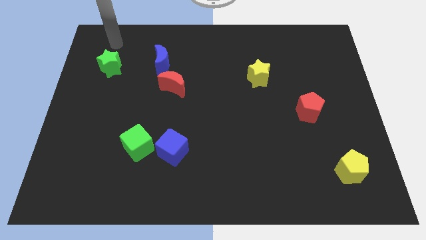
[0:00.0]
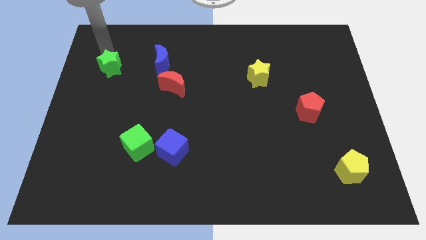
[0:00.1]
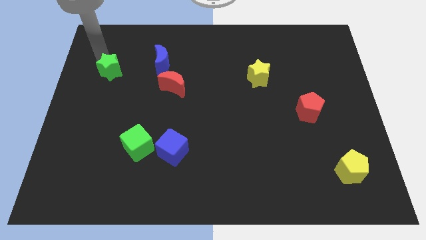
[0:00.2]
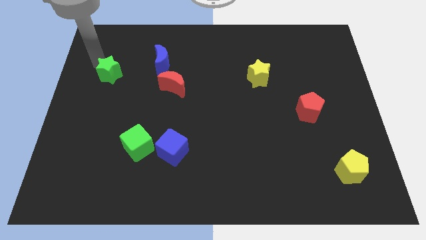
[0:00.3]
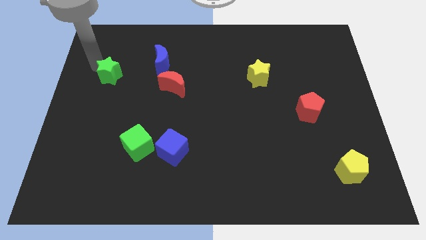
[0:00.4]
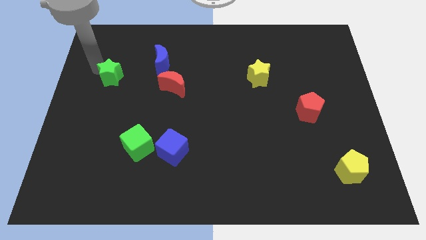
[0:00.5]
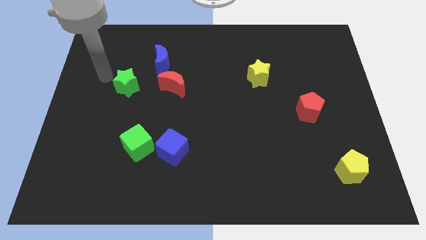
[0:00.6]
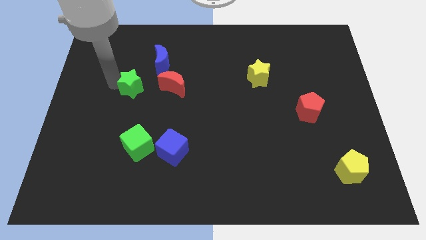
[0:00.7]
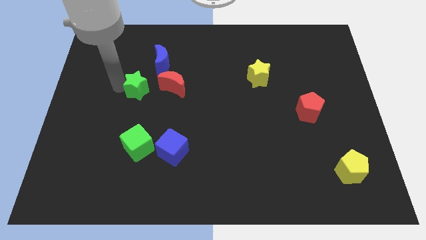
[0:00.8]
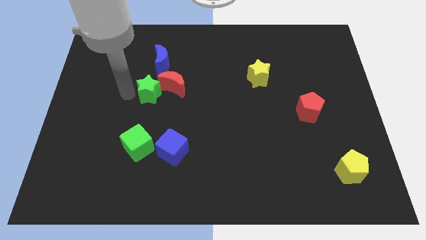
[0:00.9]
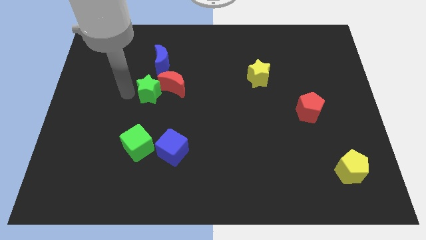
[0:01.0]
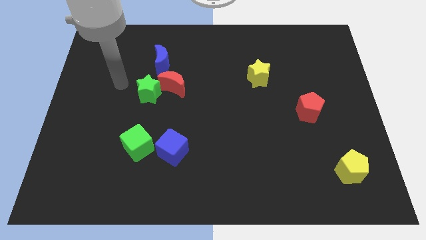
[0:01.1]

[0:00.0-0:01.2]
push the green star to the bottom left to the red crescent

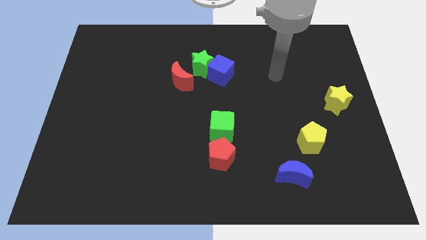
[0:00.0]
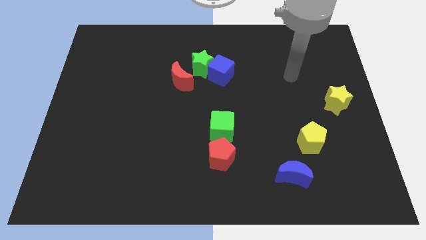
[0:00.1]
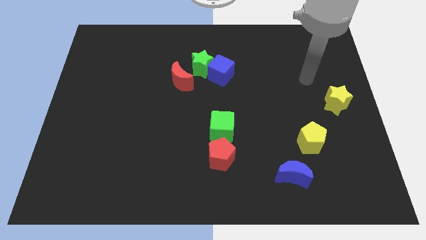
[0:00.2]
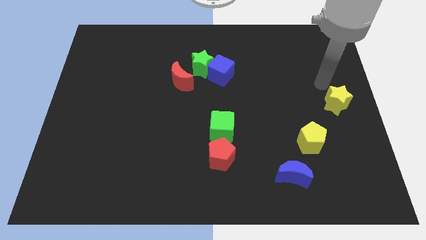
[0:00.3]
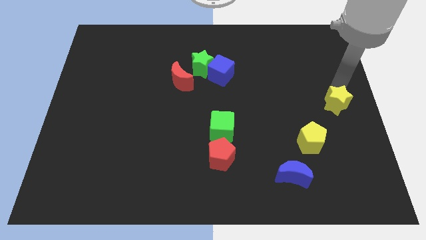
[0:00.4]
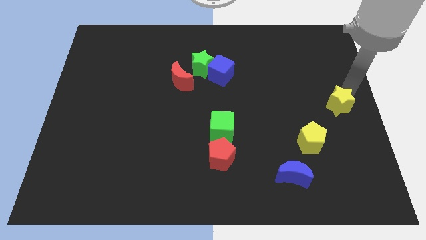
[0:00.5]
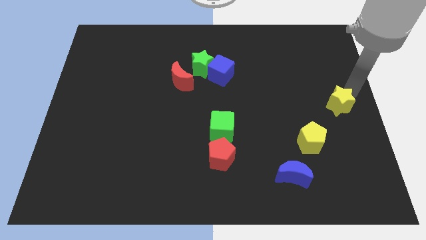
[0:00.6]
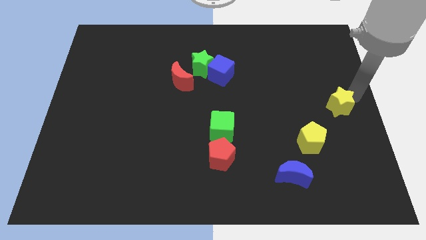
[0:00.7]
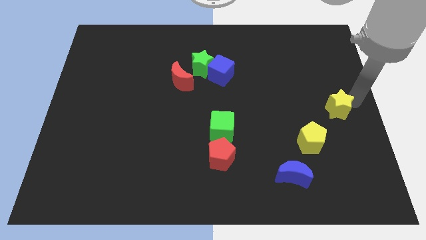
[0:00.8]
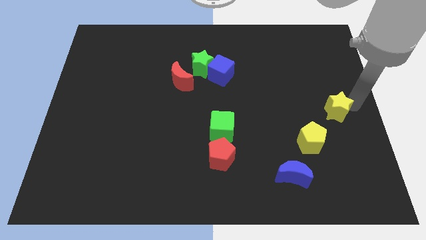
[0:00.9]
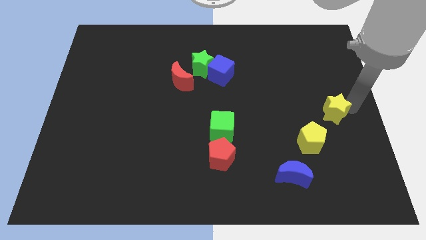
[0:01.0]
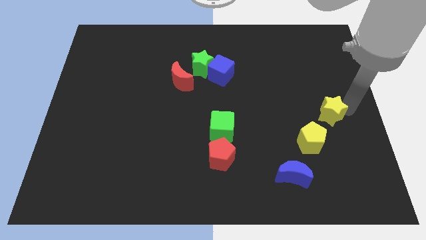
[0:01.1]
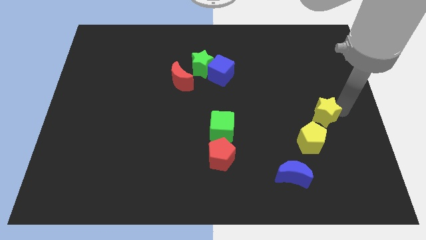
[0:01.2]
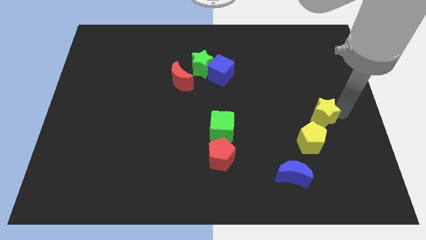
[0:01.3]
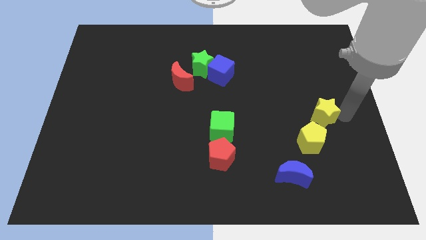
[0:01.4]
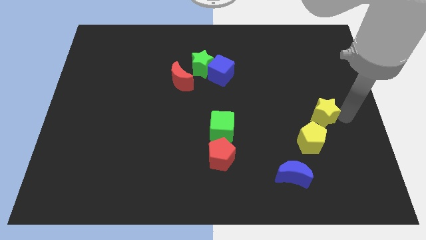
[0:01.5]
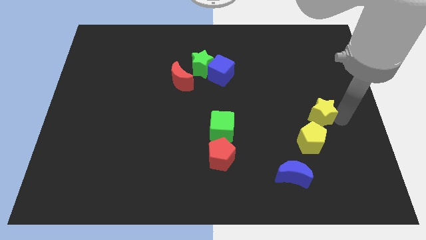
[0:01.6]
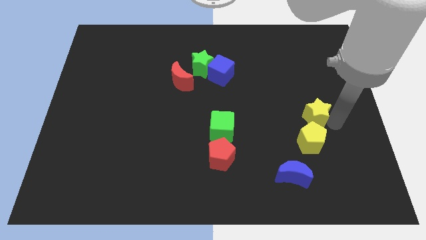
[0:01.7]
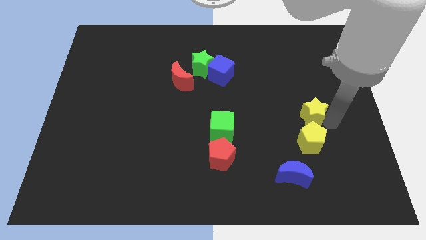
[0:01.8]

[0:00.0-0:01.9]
place the yellow star above the yellow pentagon

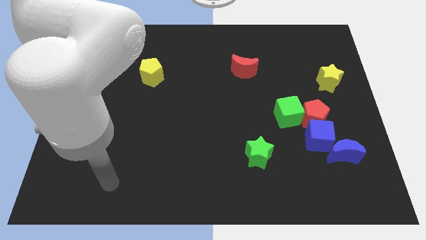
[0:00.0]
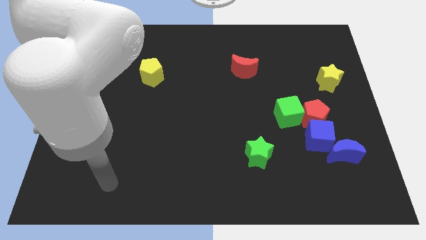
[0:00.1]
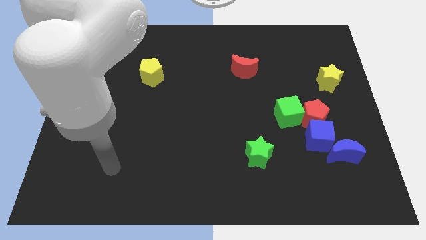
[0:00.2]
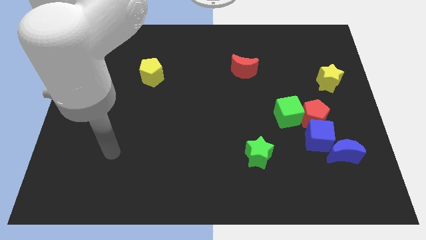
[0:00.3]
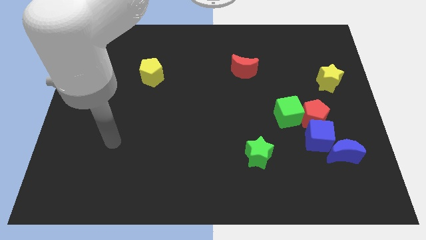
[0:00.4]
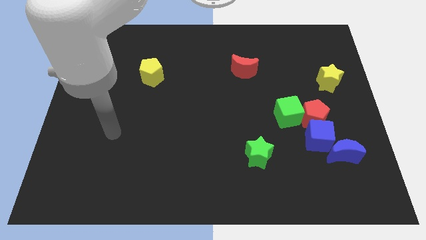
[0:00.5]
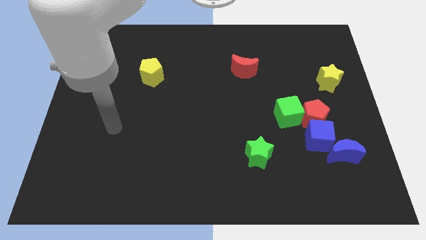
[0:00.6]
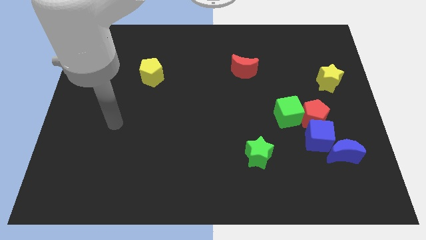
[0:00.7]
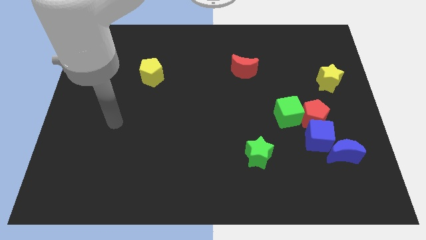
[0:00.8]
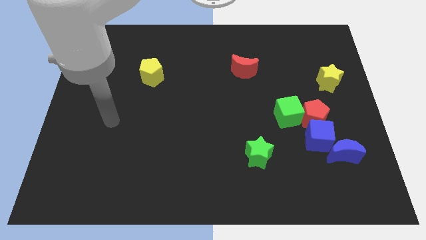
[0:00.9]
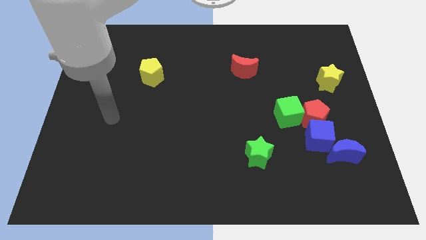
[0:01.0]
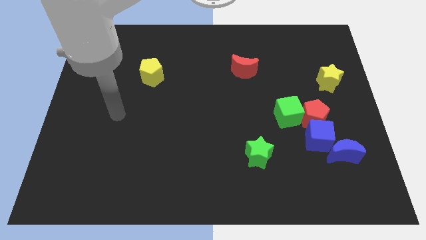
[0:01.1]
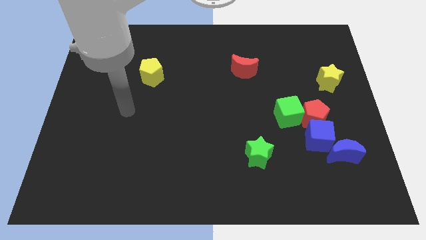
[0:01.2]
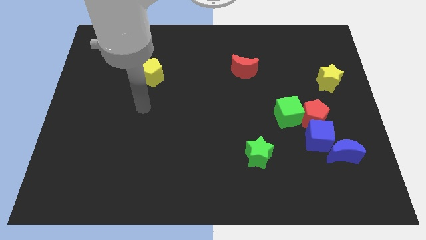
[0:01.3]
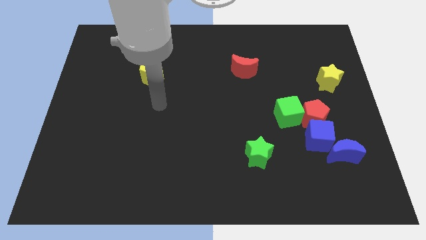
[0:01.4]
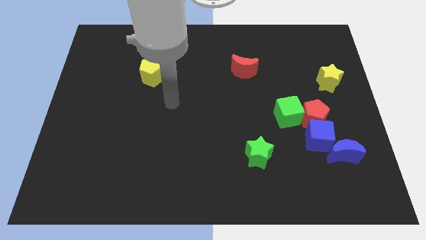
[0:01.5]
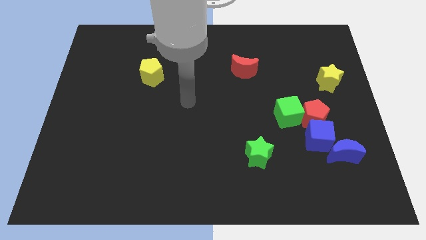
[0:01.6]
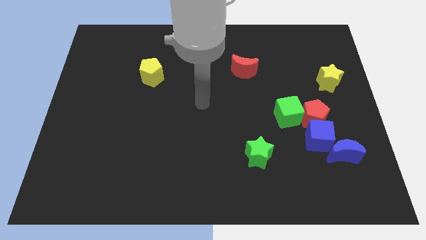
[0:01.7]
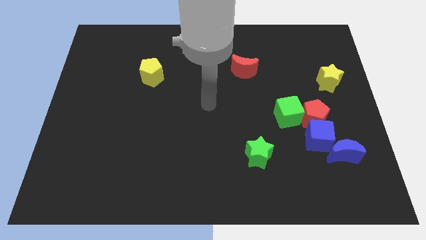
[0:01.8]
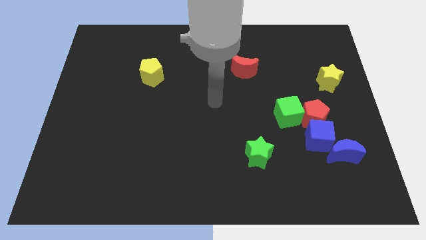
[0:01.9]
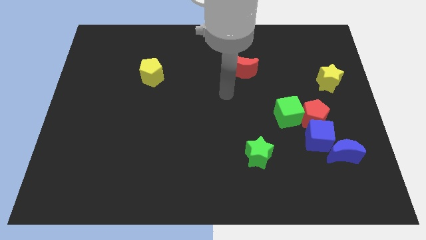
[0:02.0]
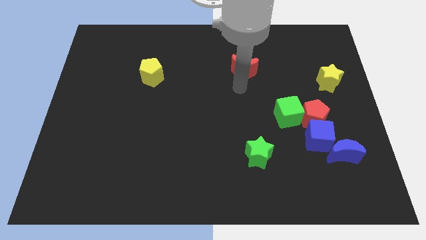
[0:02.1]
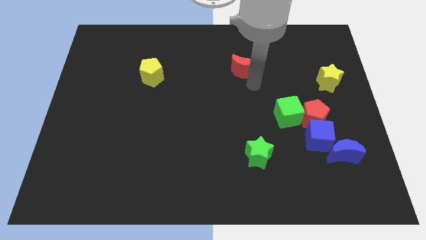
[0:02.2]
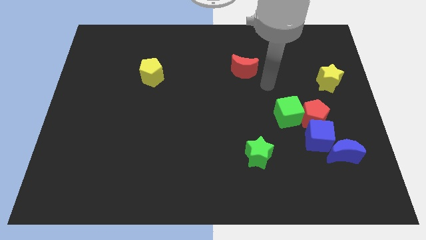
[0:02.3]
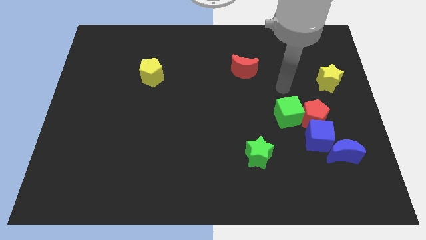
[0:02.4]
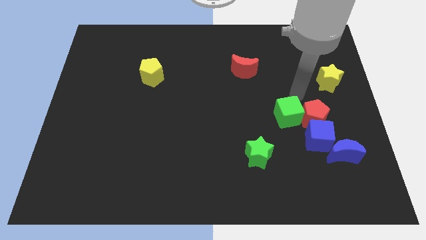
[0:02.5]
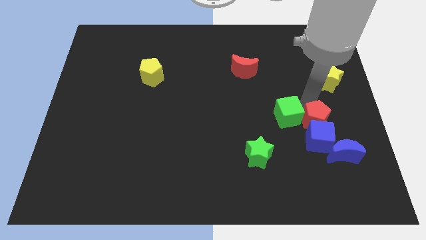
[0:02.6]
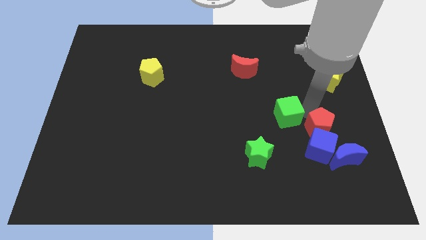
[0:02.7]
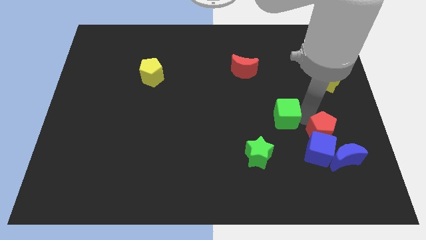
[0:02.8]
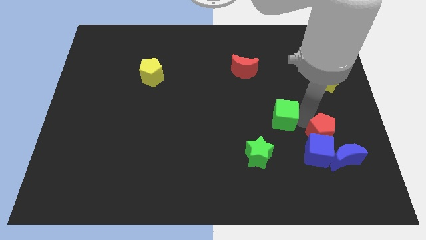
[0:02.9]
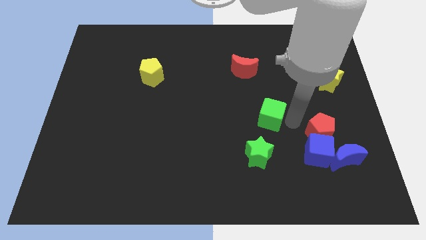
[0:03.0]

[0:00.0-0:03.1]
place your arm right to the green cube

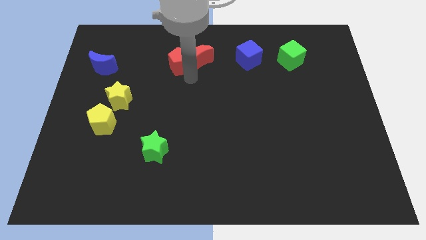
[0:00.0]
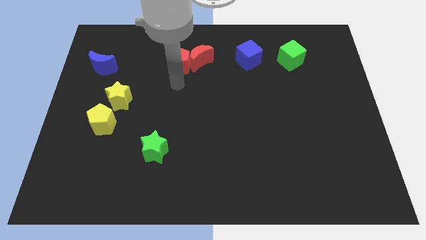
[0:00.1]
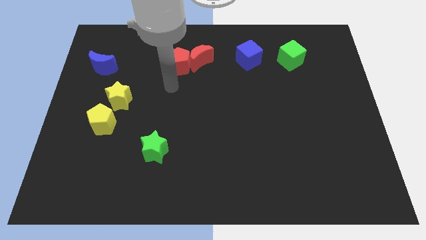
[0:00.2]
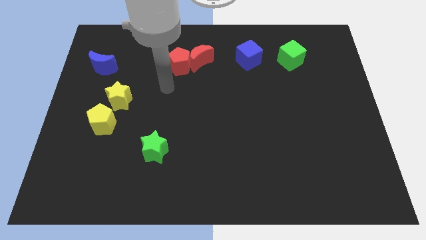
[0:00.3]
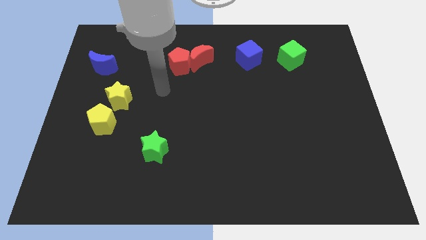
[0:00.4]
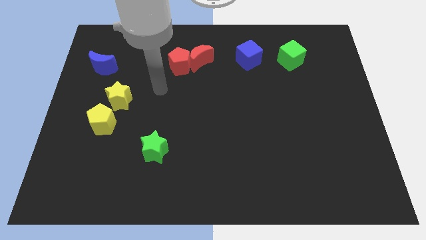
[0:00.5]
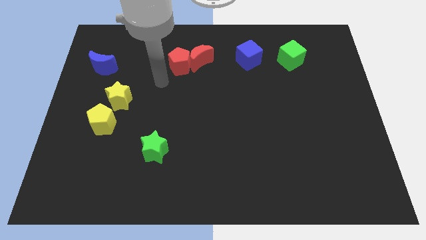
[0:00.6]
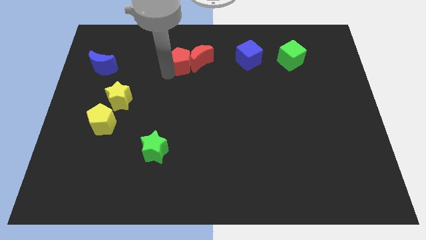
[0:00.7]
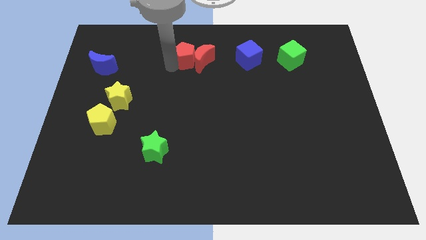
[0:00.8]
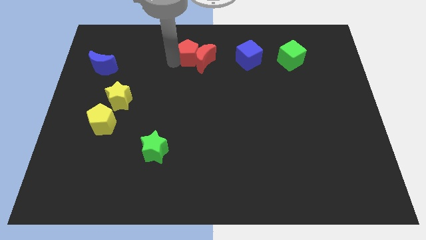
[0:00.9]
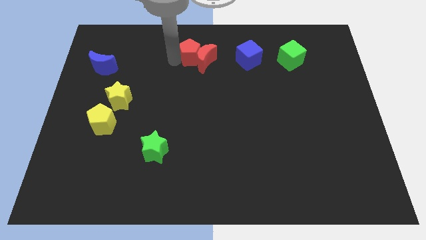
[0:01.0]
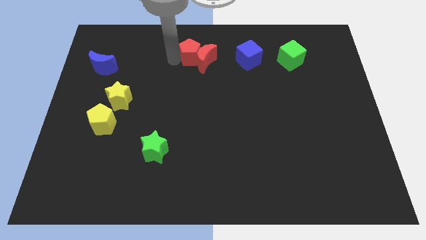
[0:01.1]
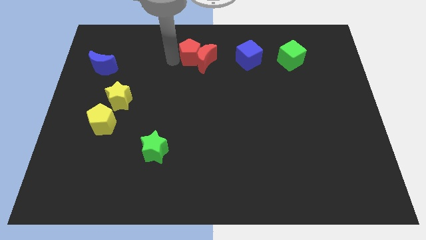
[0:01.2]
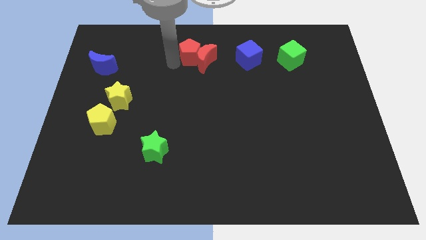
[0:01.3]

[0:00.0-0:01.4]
slightly move the red pentagon to the top centre of the board

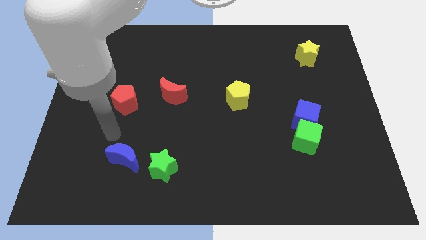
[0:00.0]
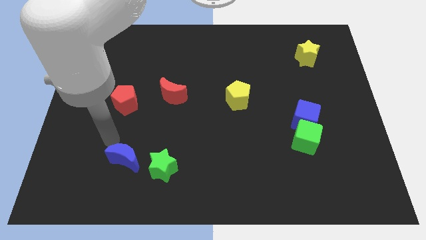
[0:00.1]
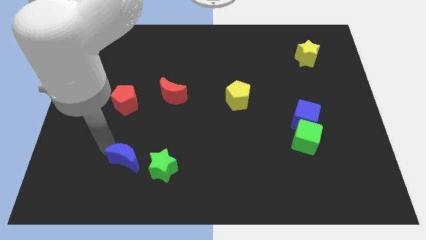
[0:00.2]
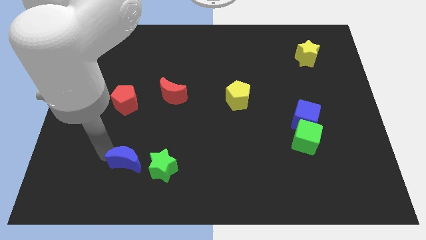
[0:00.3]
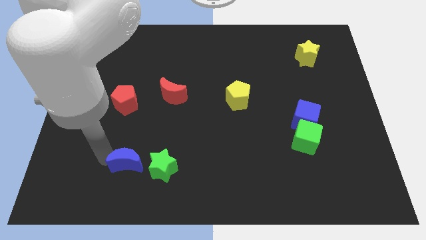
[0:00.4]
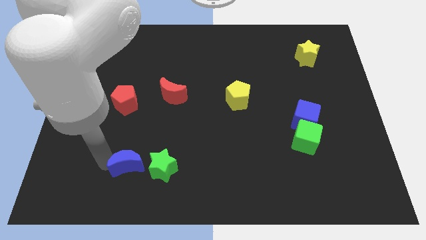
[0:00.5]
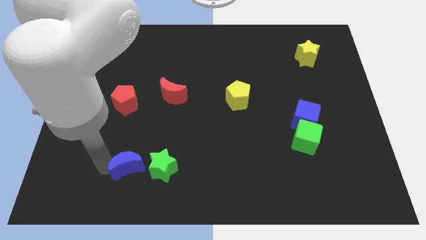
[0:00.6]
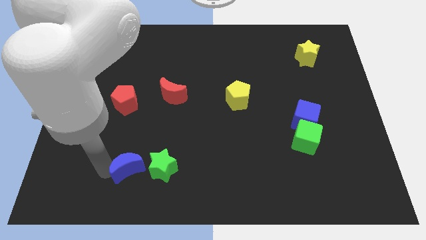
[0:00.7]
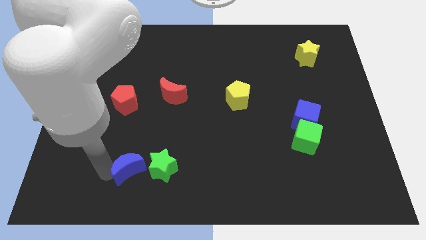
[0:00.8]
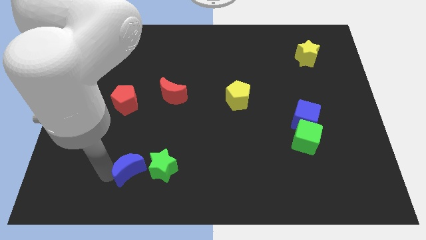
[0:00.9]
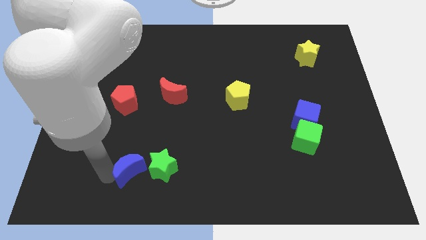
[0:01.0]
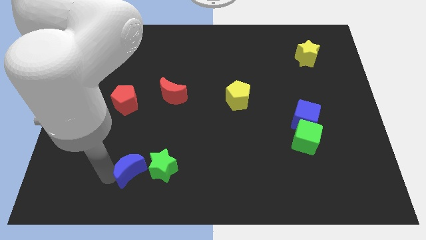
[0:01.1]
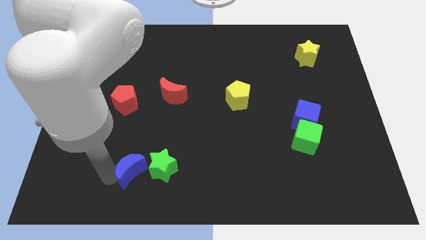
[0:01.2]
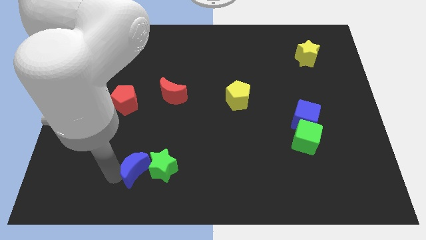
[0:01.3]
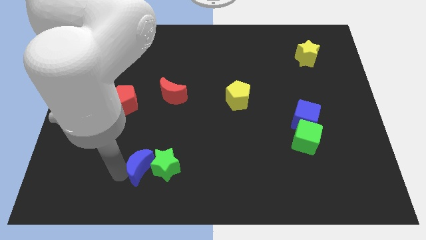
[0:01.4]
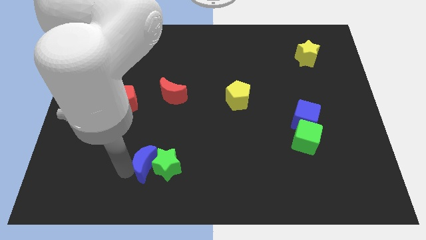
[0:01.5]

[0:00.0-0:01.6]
push the blue moon into the green star
